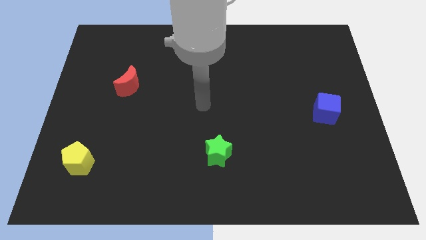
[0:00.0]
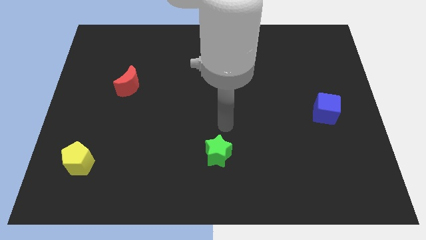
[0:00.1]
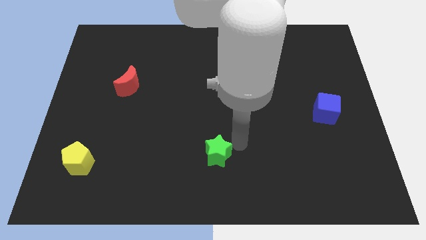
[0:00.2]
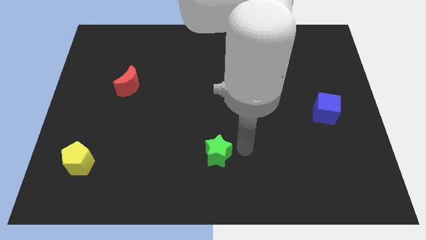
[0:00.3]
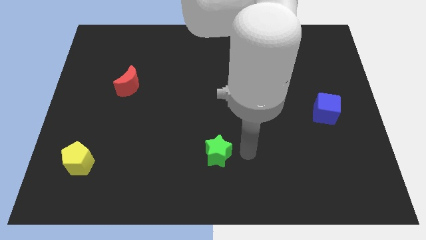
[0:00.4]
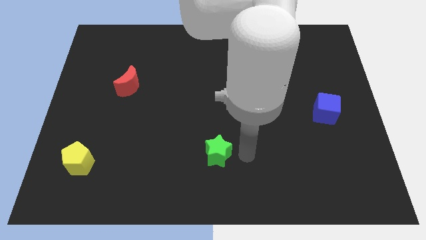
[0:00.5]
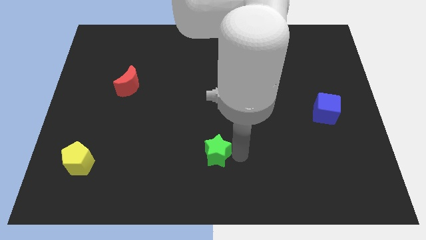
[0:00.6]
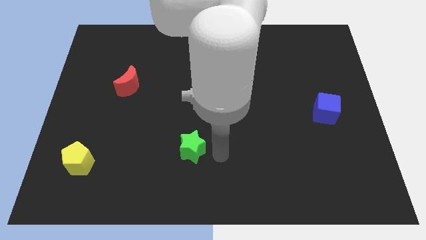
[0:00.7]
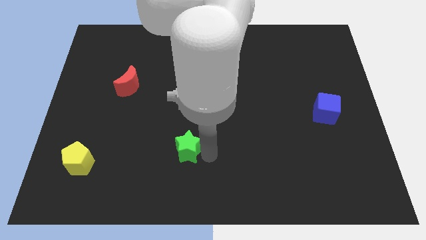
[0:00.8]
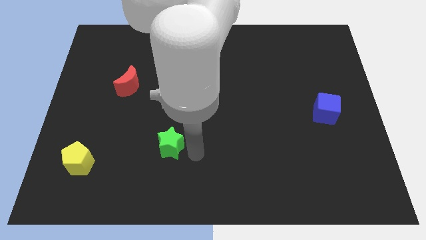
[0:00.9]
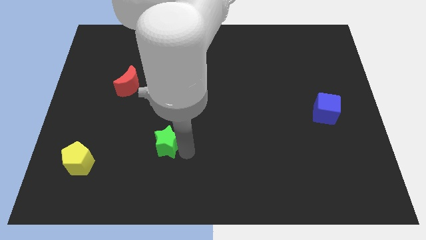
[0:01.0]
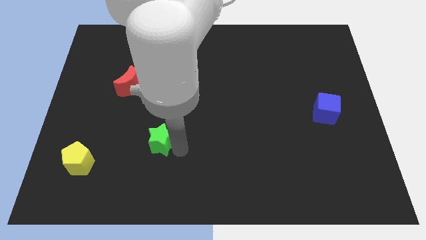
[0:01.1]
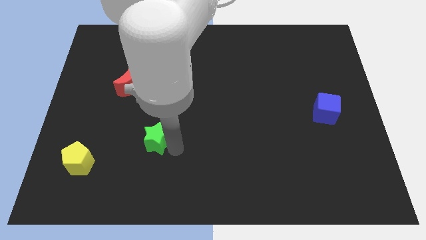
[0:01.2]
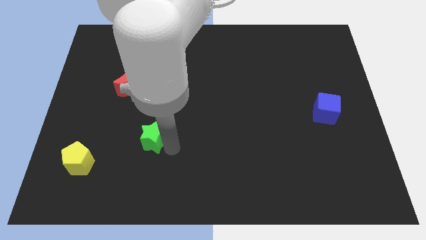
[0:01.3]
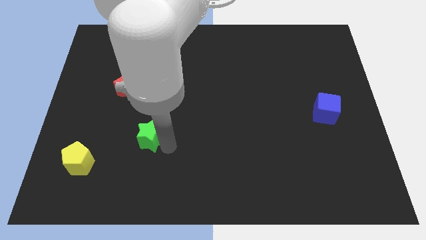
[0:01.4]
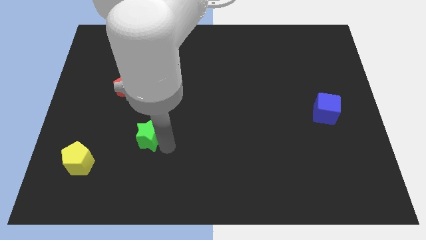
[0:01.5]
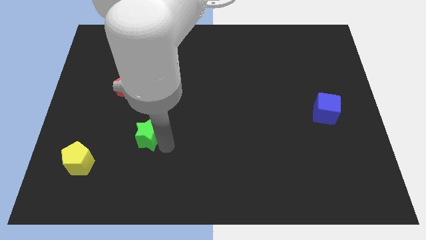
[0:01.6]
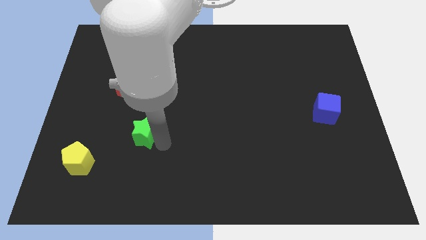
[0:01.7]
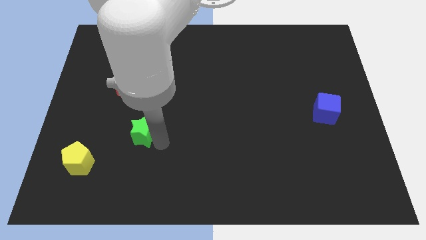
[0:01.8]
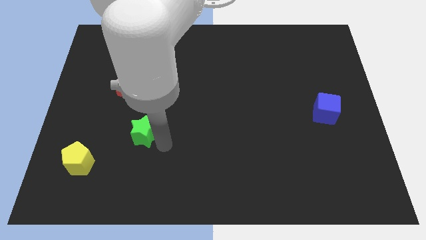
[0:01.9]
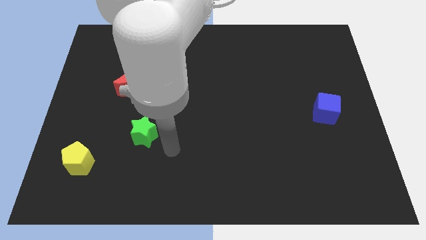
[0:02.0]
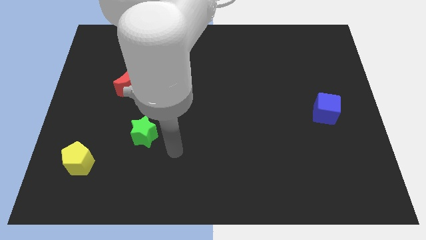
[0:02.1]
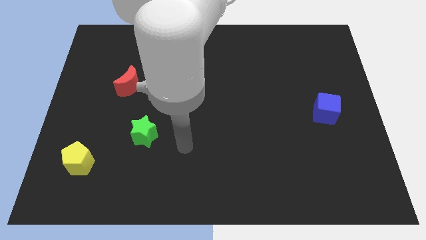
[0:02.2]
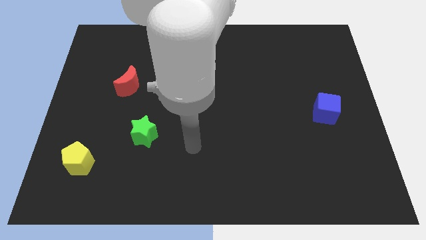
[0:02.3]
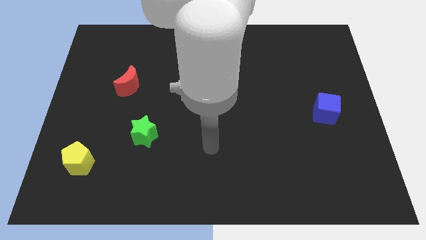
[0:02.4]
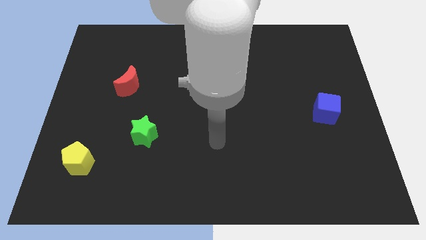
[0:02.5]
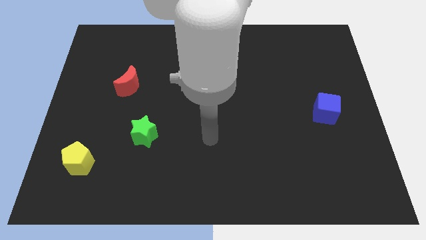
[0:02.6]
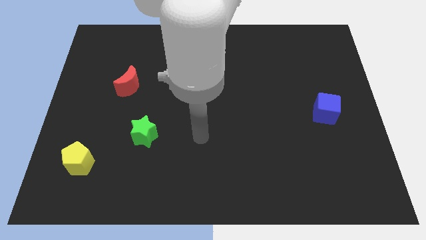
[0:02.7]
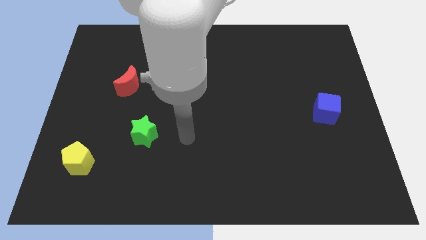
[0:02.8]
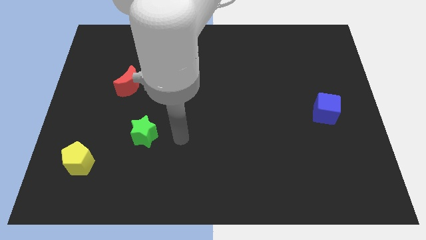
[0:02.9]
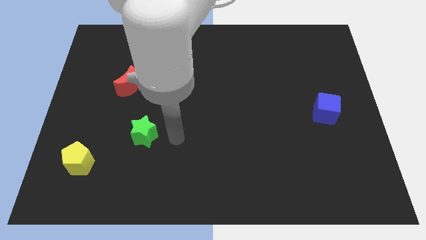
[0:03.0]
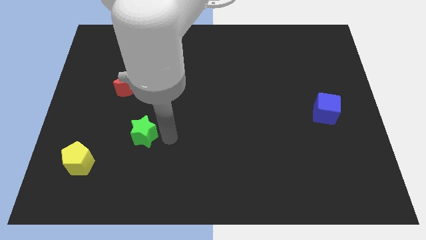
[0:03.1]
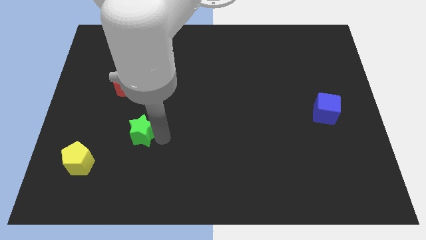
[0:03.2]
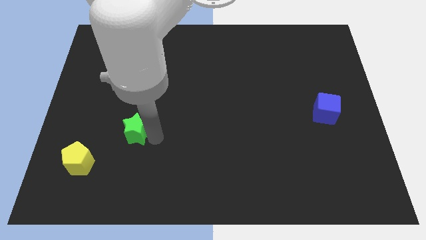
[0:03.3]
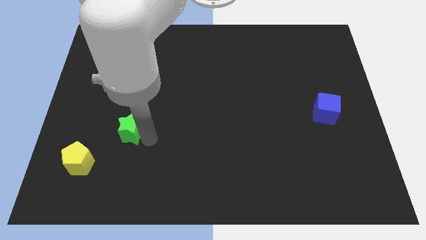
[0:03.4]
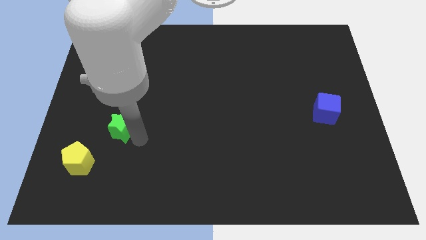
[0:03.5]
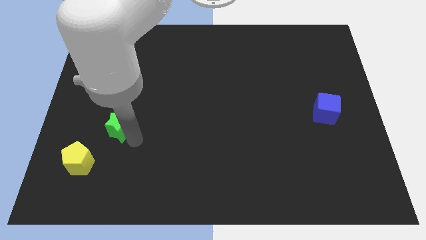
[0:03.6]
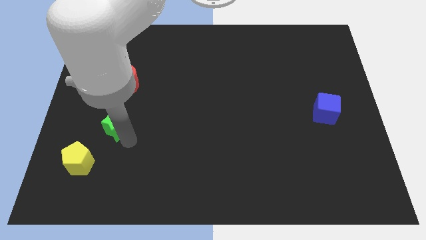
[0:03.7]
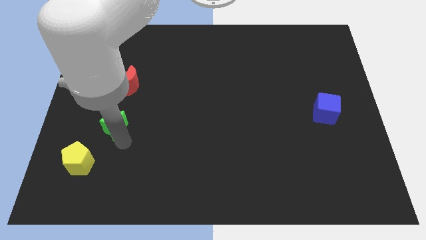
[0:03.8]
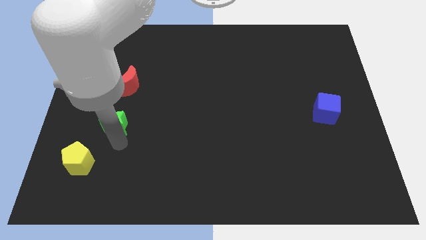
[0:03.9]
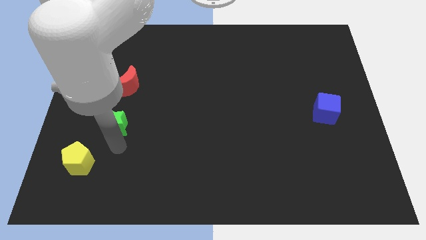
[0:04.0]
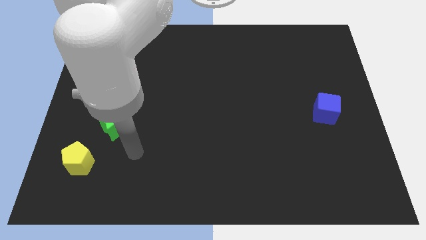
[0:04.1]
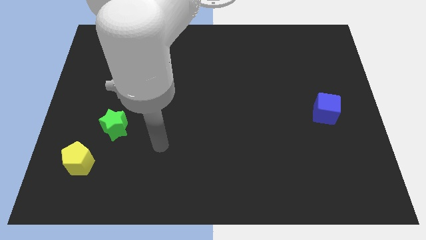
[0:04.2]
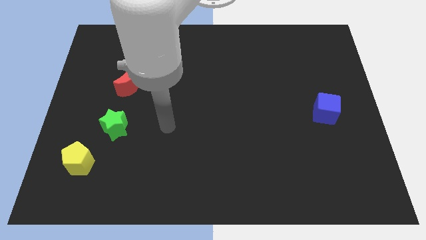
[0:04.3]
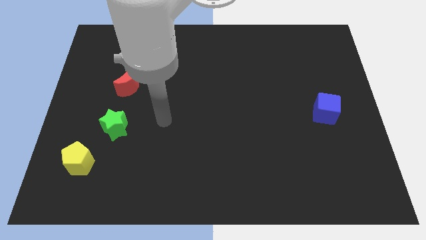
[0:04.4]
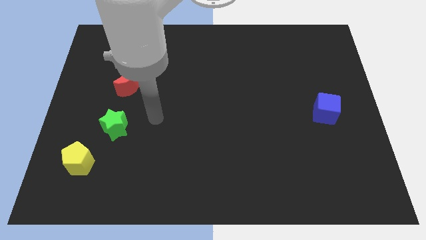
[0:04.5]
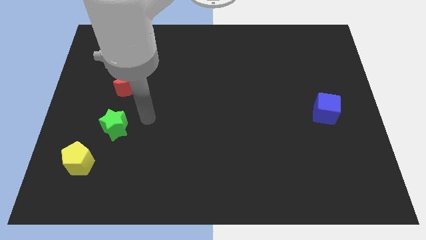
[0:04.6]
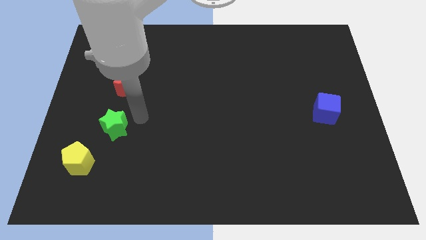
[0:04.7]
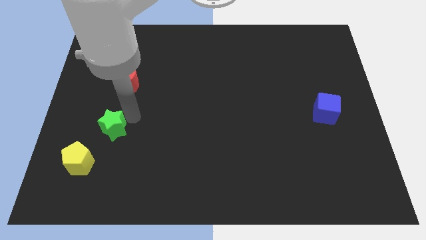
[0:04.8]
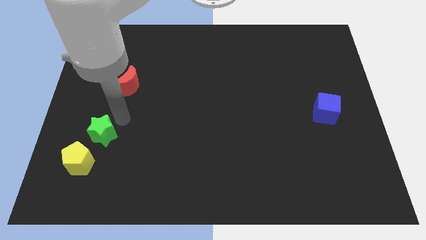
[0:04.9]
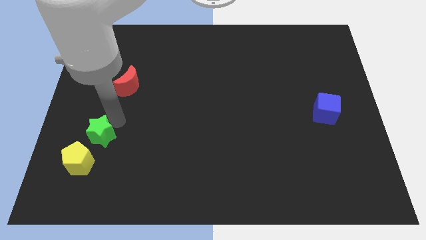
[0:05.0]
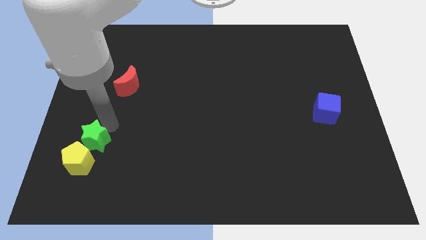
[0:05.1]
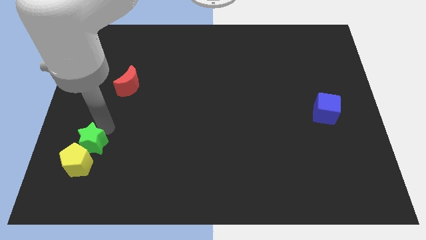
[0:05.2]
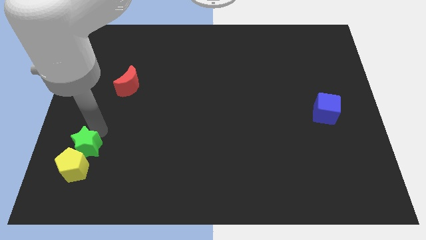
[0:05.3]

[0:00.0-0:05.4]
put the green block close to the yellow block

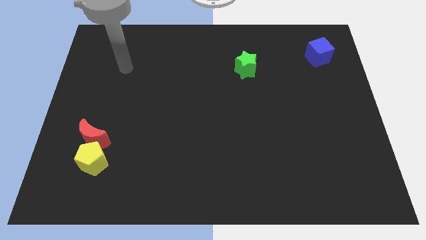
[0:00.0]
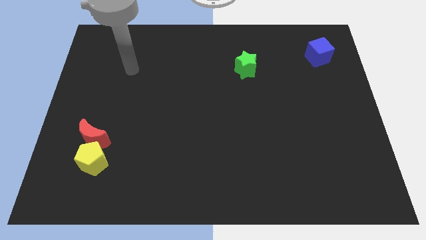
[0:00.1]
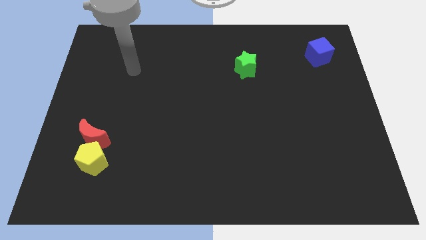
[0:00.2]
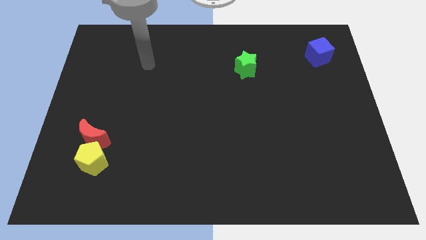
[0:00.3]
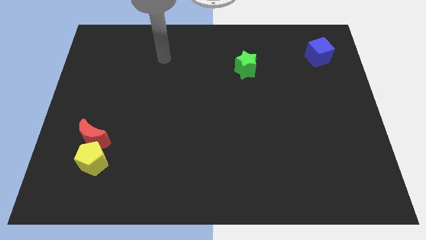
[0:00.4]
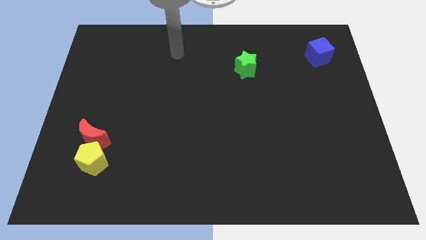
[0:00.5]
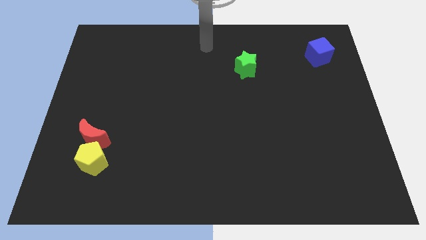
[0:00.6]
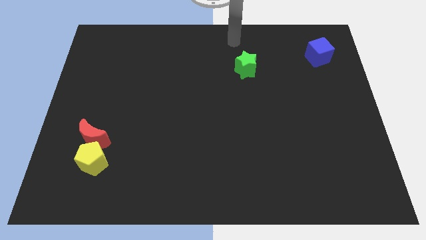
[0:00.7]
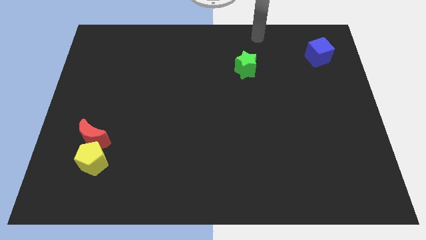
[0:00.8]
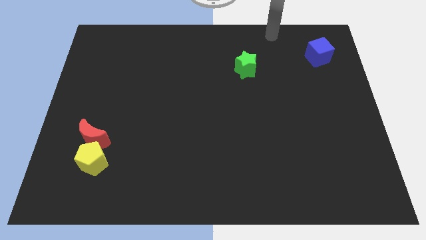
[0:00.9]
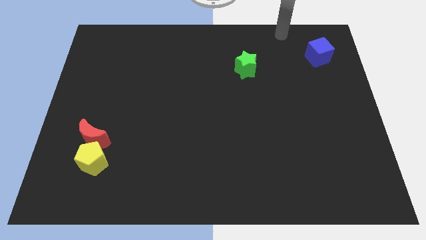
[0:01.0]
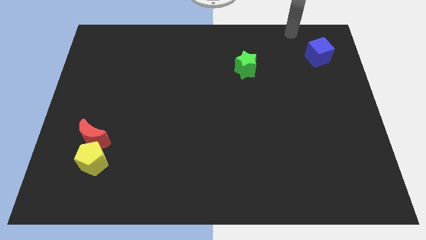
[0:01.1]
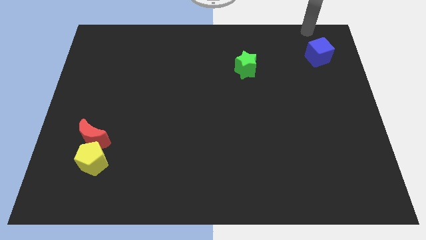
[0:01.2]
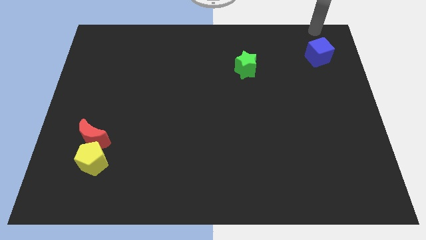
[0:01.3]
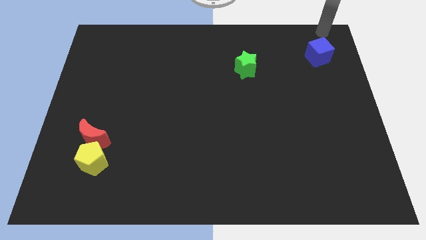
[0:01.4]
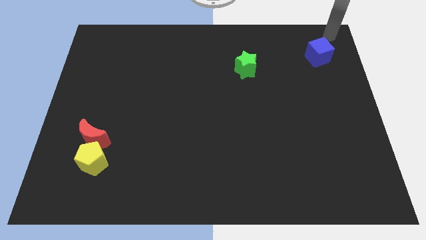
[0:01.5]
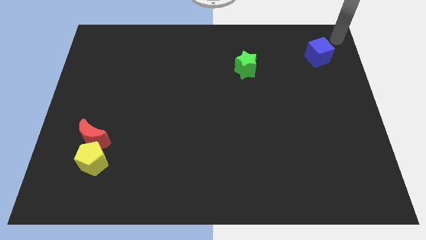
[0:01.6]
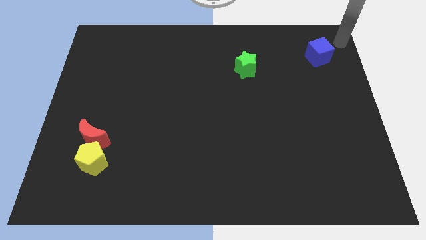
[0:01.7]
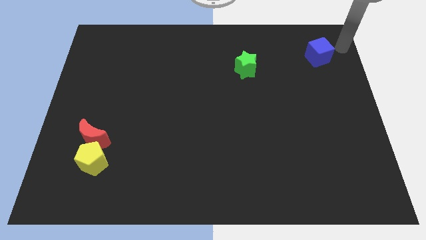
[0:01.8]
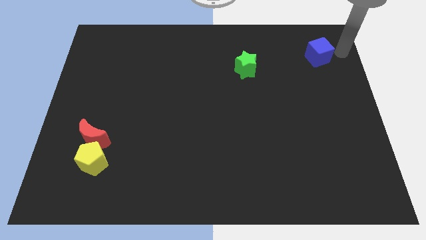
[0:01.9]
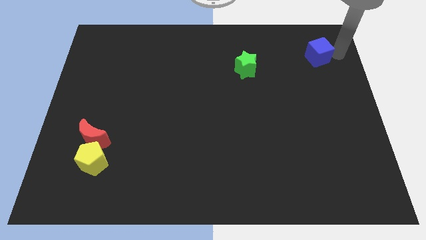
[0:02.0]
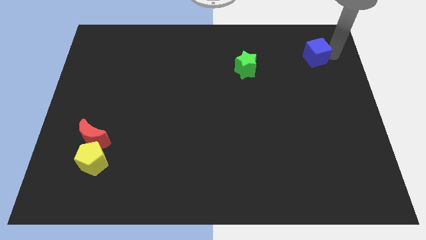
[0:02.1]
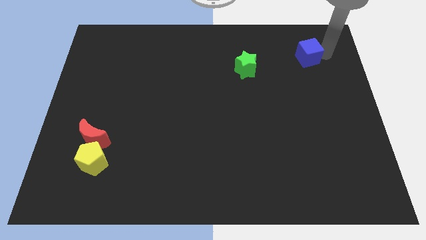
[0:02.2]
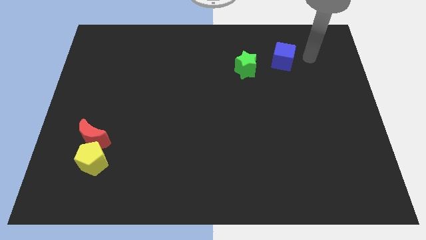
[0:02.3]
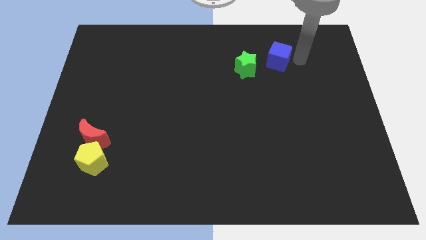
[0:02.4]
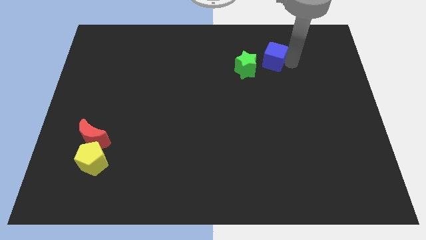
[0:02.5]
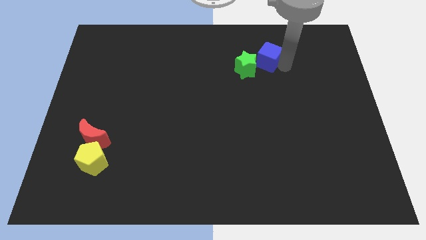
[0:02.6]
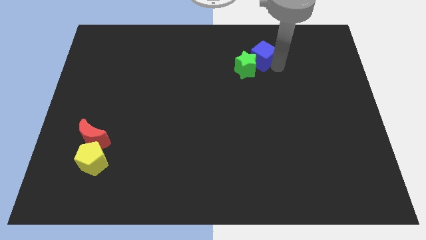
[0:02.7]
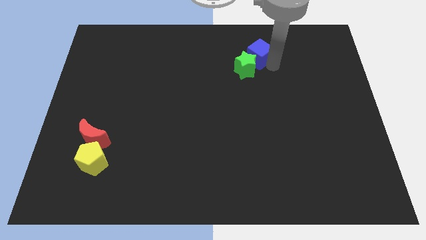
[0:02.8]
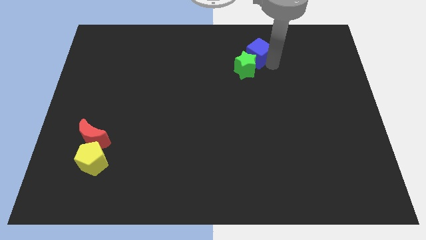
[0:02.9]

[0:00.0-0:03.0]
slide the cube next to the star
